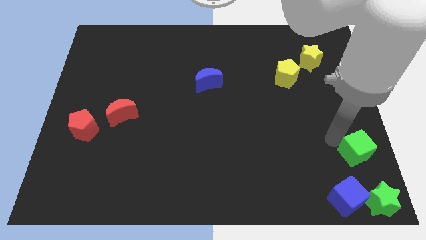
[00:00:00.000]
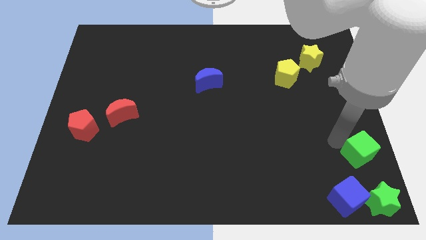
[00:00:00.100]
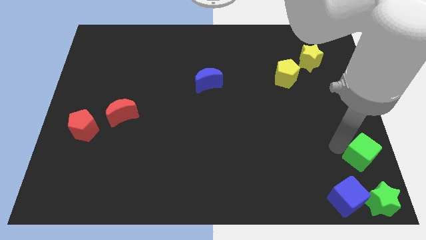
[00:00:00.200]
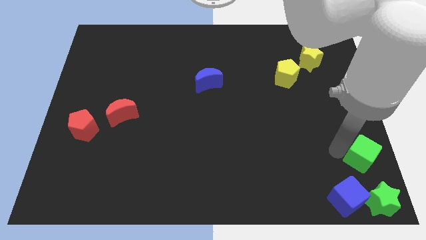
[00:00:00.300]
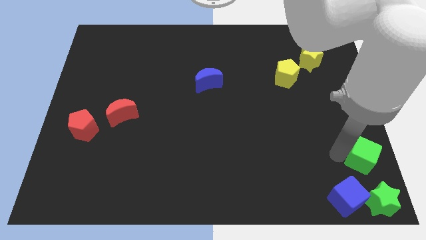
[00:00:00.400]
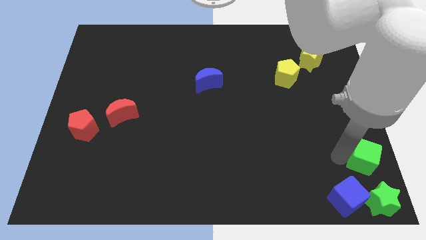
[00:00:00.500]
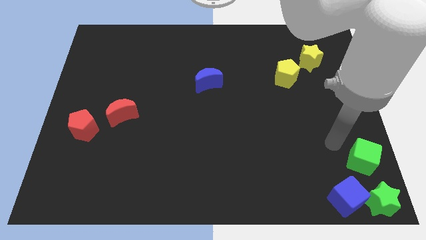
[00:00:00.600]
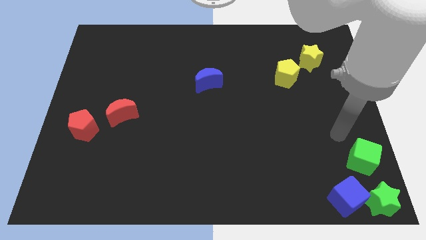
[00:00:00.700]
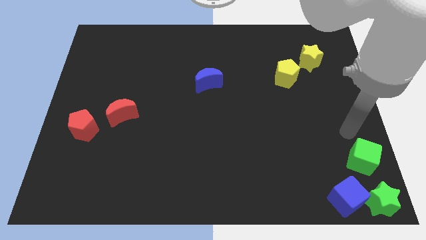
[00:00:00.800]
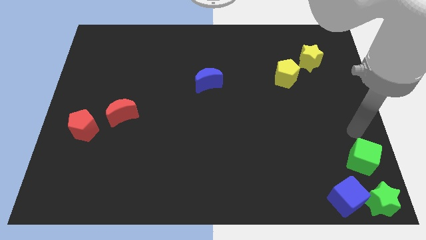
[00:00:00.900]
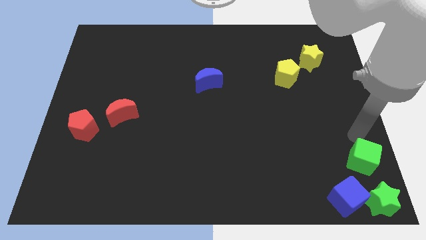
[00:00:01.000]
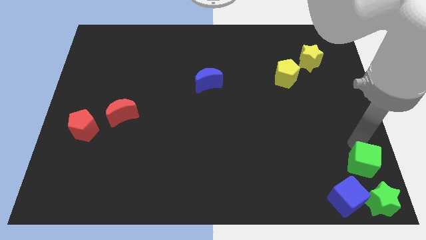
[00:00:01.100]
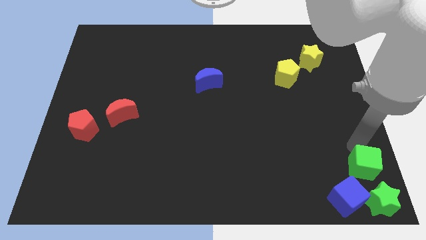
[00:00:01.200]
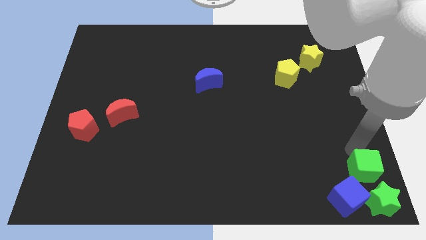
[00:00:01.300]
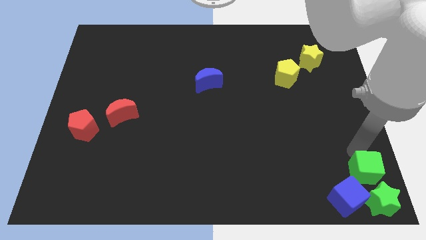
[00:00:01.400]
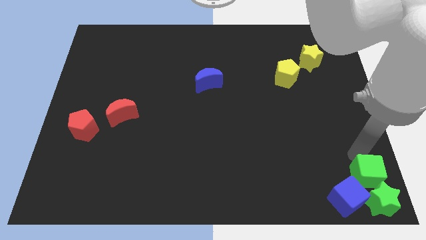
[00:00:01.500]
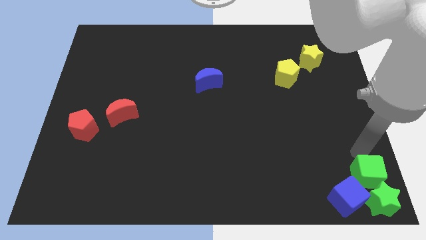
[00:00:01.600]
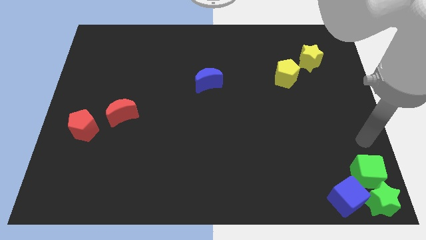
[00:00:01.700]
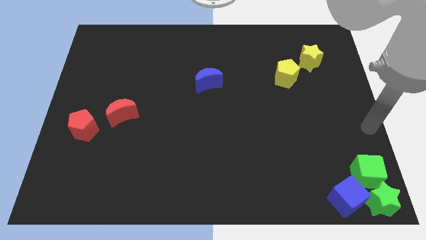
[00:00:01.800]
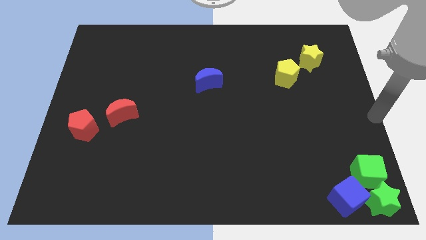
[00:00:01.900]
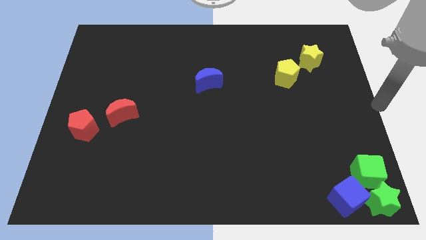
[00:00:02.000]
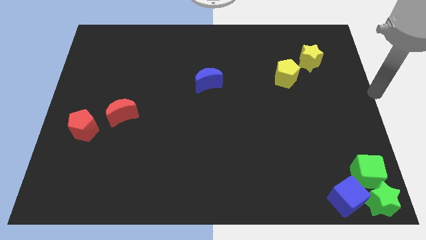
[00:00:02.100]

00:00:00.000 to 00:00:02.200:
move the green cube above the blue cube and the green star

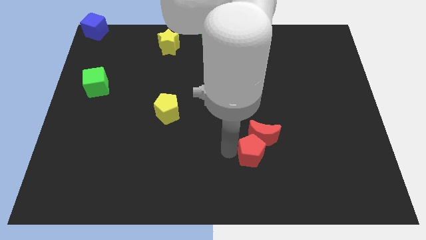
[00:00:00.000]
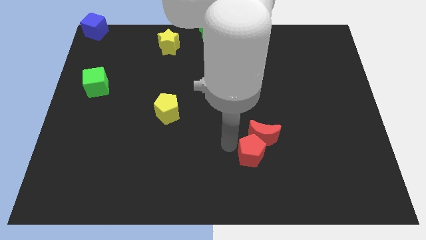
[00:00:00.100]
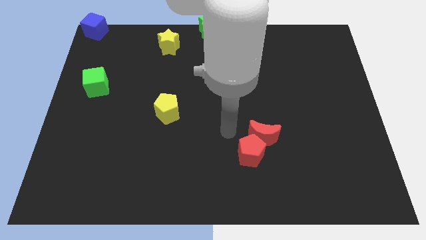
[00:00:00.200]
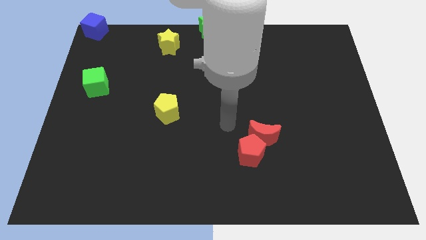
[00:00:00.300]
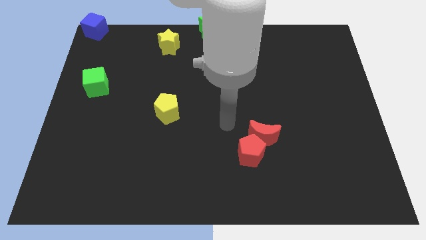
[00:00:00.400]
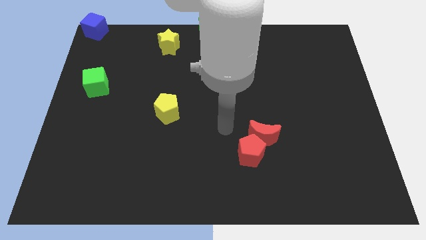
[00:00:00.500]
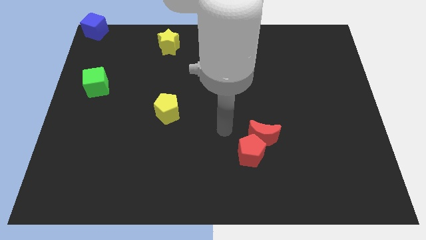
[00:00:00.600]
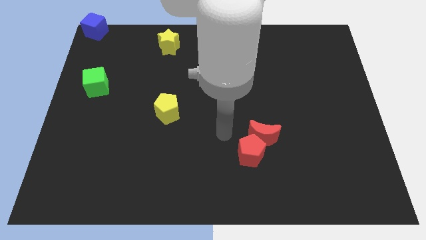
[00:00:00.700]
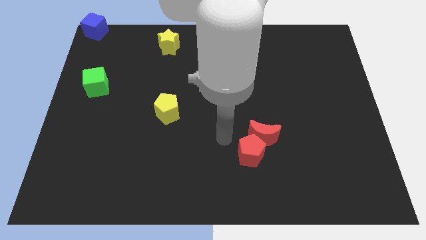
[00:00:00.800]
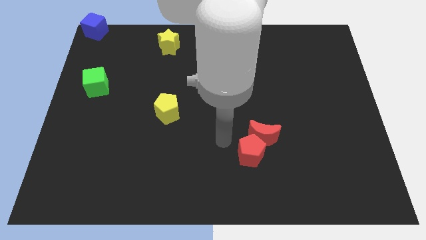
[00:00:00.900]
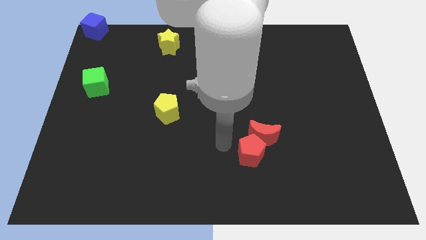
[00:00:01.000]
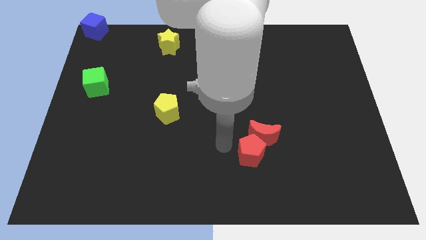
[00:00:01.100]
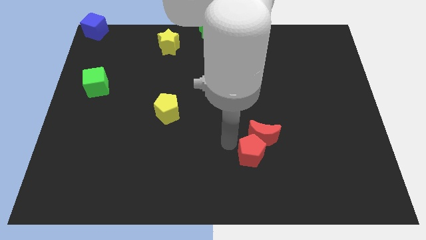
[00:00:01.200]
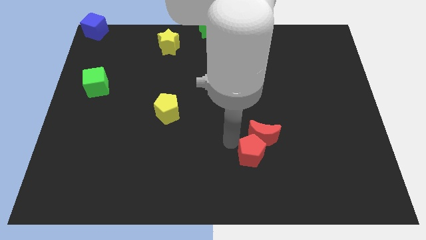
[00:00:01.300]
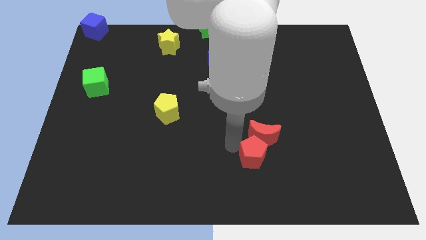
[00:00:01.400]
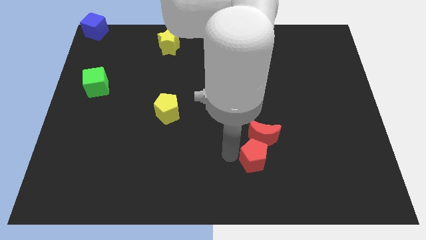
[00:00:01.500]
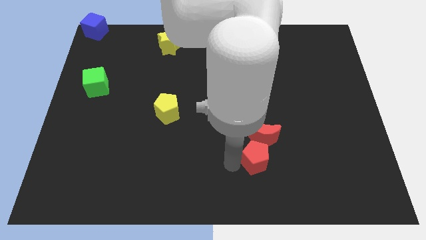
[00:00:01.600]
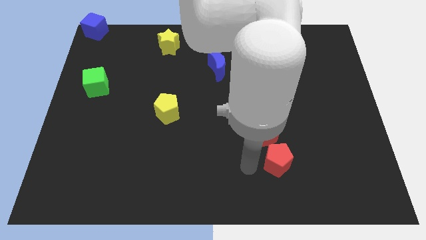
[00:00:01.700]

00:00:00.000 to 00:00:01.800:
move the red pentagon to the bottom of the red crescent

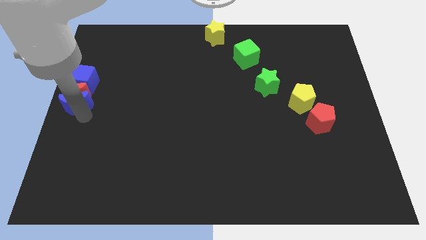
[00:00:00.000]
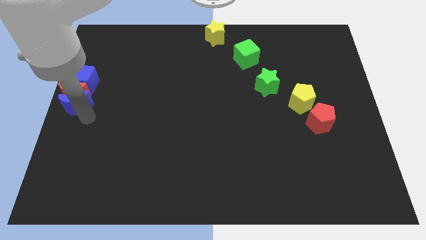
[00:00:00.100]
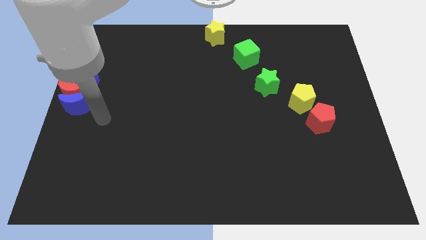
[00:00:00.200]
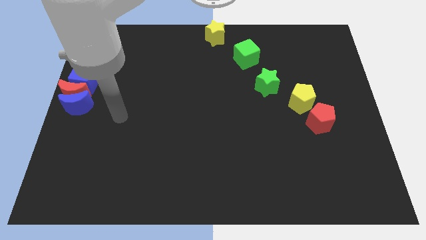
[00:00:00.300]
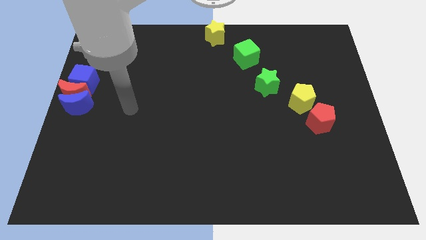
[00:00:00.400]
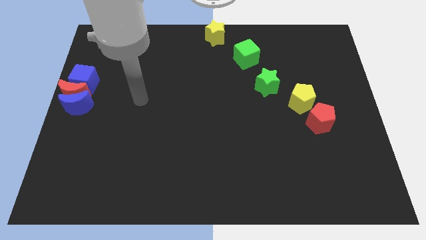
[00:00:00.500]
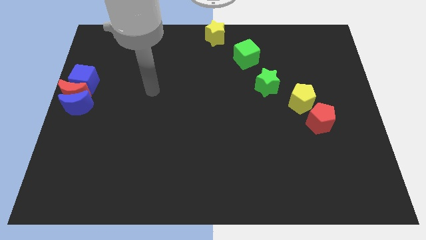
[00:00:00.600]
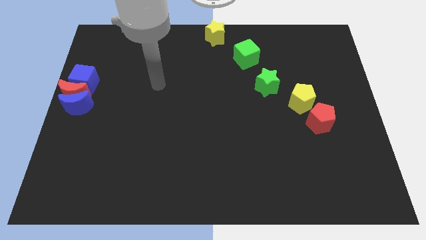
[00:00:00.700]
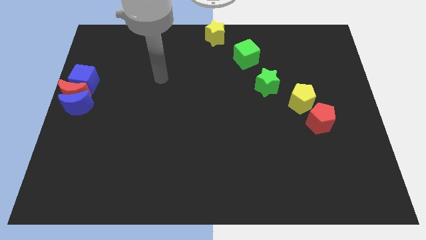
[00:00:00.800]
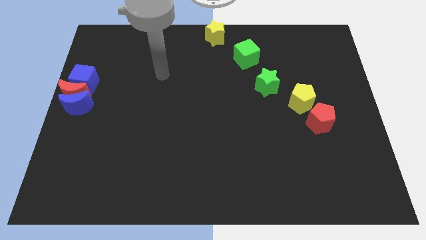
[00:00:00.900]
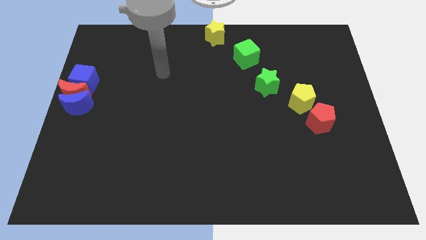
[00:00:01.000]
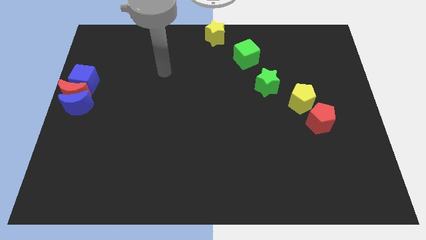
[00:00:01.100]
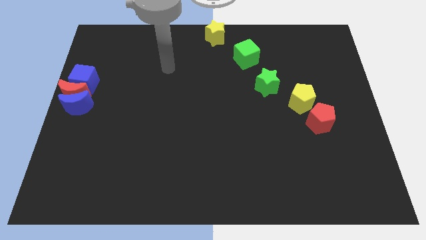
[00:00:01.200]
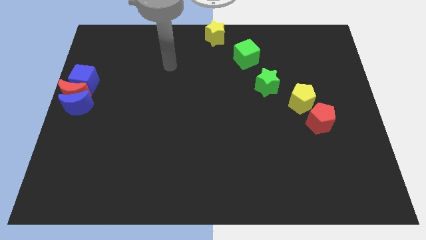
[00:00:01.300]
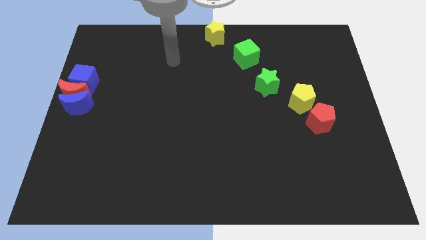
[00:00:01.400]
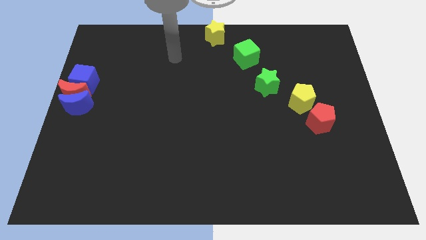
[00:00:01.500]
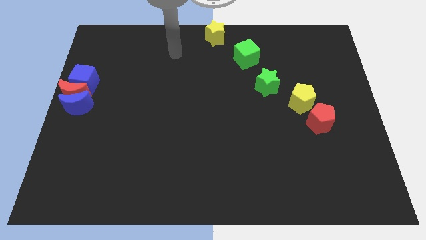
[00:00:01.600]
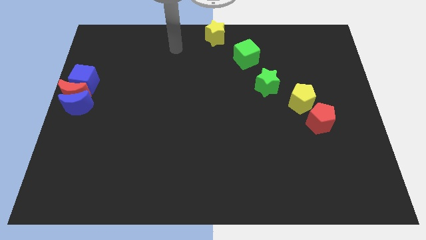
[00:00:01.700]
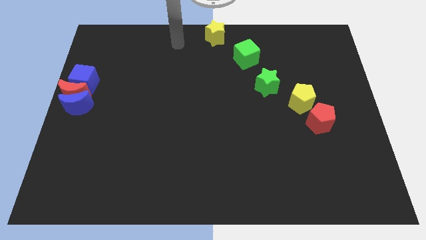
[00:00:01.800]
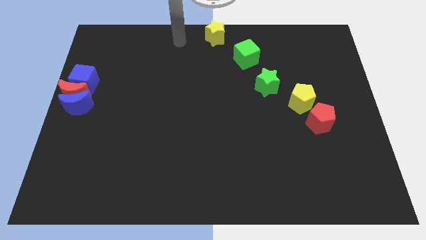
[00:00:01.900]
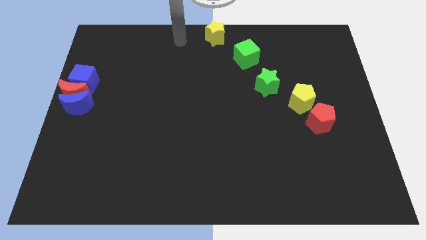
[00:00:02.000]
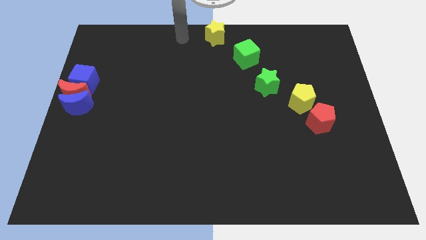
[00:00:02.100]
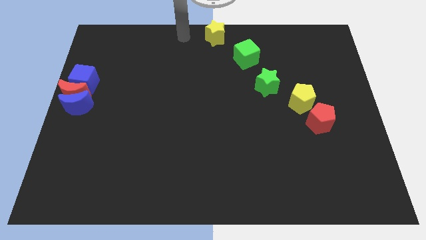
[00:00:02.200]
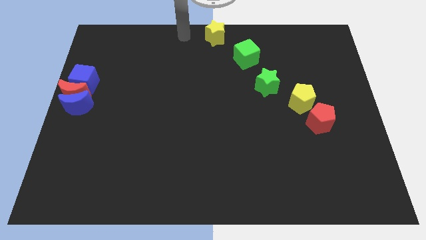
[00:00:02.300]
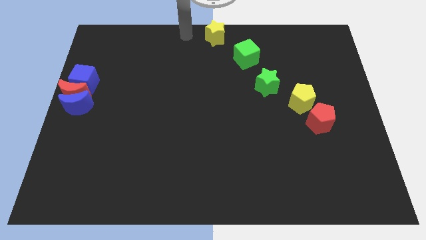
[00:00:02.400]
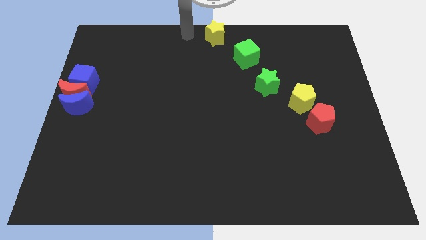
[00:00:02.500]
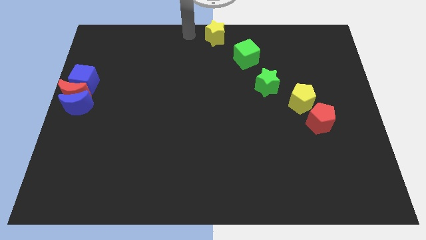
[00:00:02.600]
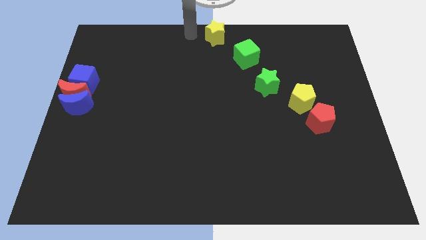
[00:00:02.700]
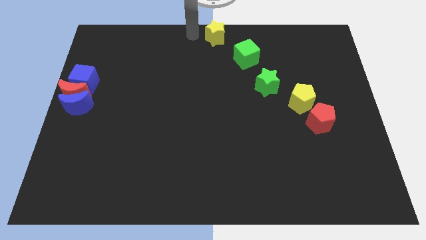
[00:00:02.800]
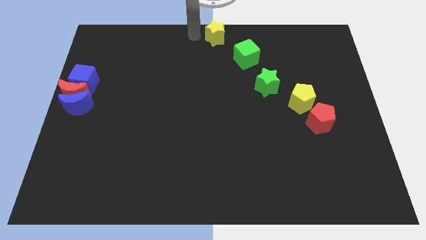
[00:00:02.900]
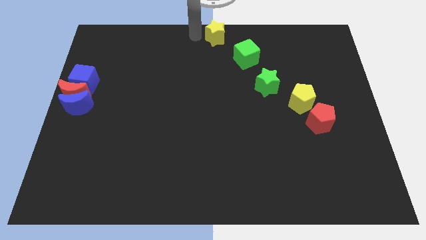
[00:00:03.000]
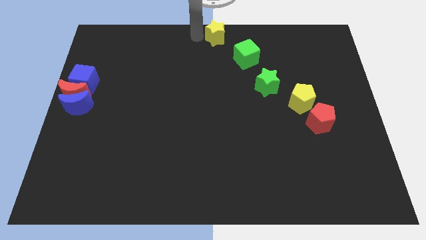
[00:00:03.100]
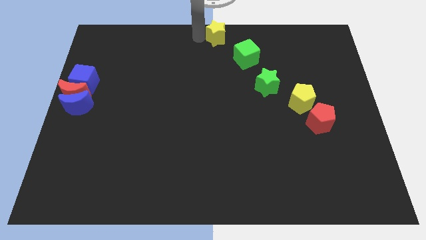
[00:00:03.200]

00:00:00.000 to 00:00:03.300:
move the arm towards the top center of the board

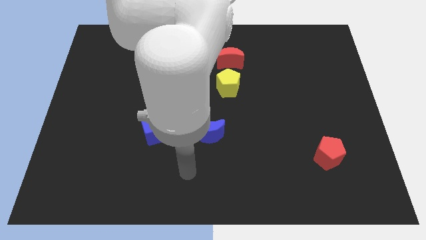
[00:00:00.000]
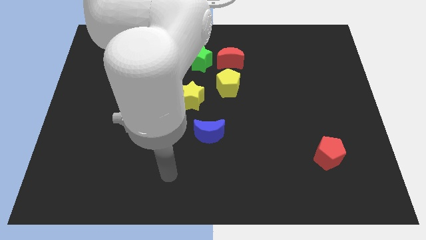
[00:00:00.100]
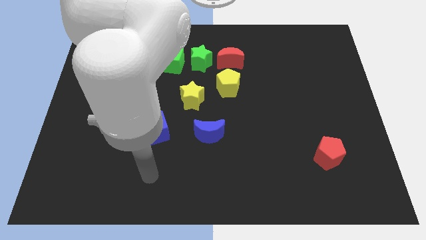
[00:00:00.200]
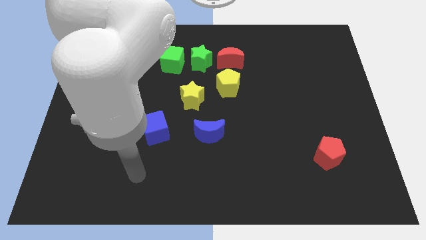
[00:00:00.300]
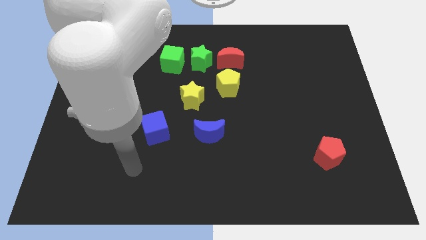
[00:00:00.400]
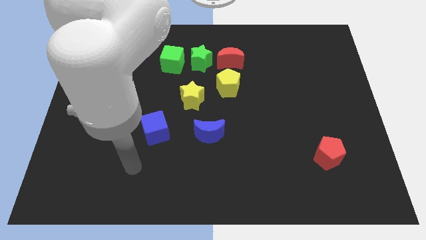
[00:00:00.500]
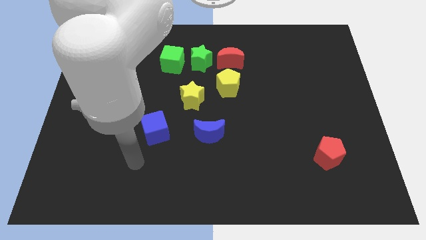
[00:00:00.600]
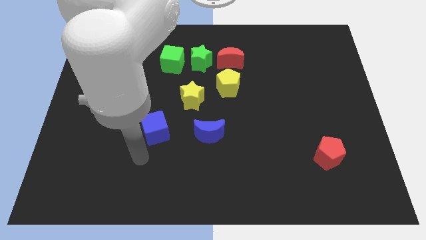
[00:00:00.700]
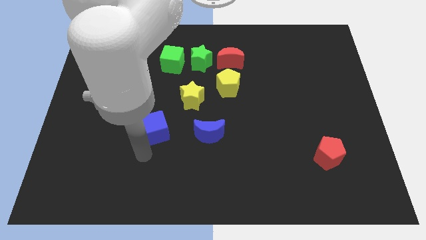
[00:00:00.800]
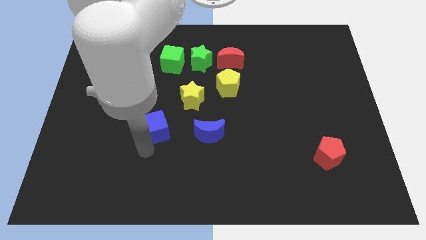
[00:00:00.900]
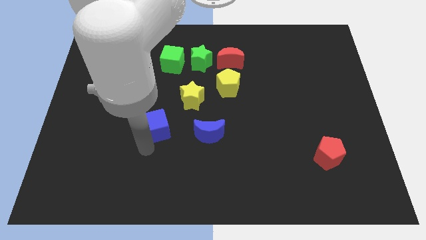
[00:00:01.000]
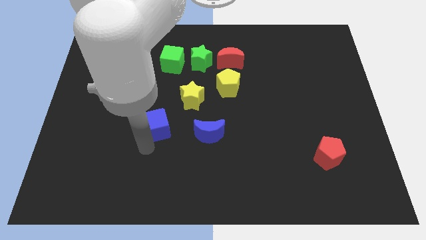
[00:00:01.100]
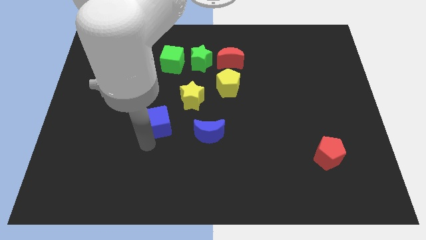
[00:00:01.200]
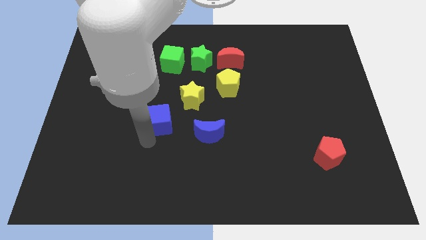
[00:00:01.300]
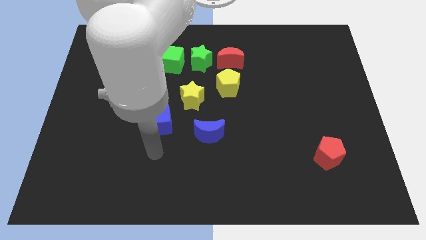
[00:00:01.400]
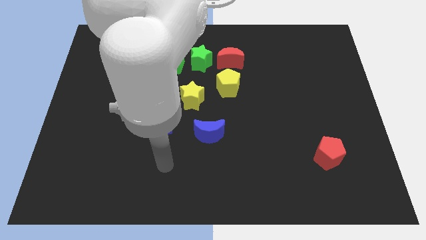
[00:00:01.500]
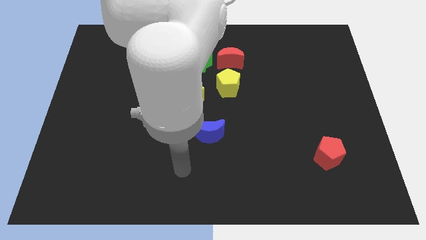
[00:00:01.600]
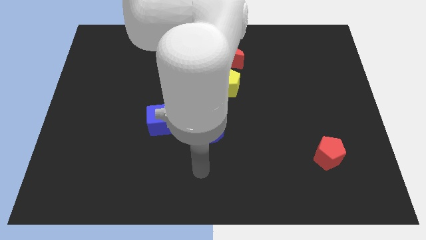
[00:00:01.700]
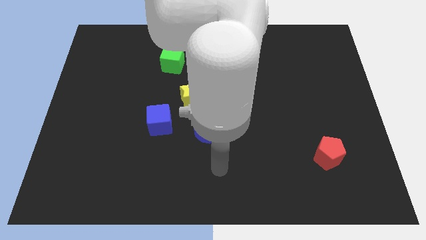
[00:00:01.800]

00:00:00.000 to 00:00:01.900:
move the blue cube towards left side of the yellow star
